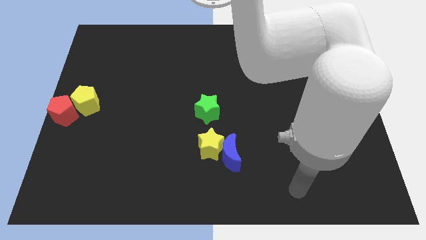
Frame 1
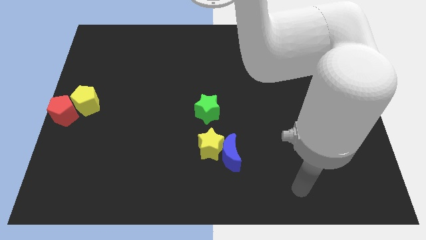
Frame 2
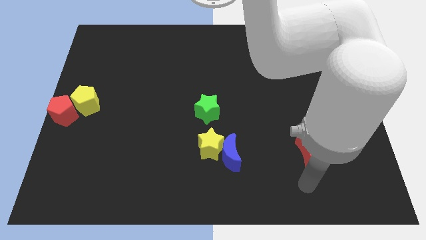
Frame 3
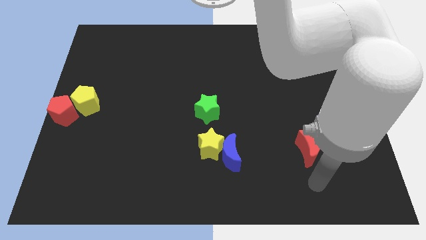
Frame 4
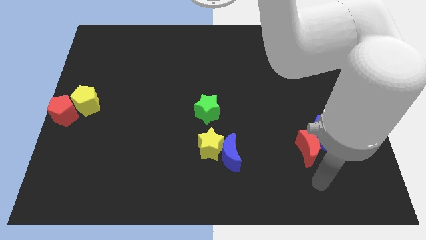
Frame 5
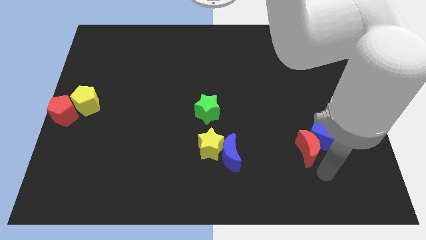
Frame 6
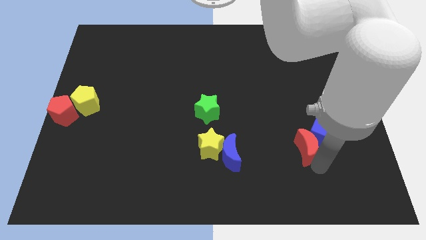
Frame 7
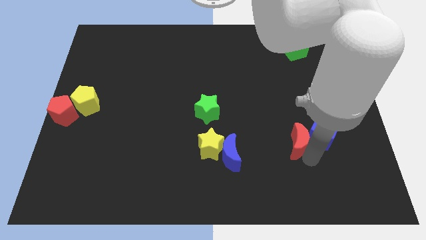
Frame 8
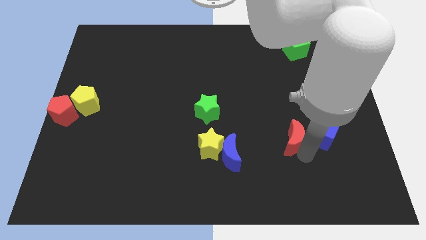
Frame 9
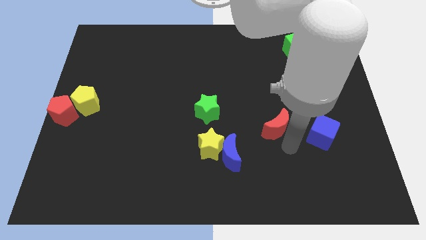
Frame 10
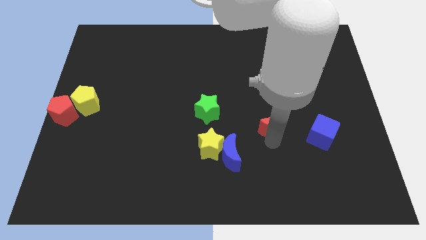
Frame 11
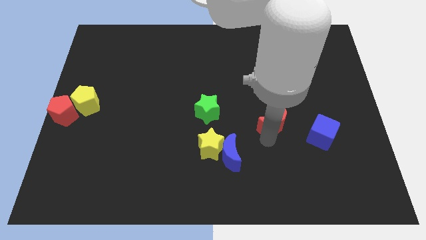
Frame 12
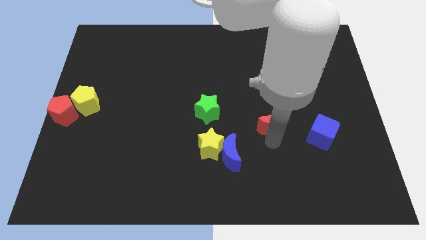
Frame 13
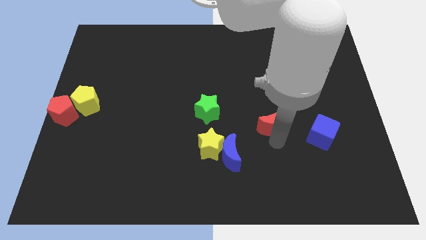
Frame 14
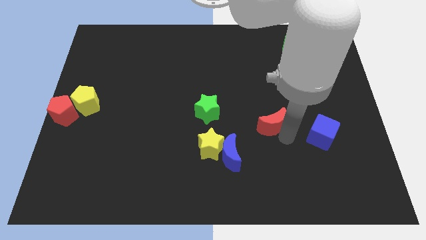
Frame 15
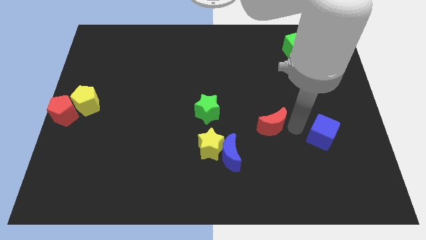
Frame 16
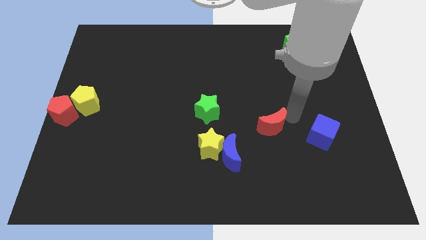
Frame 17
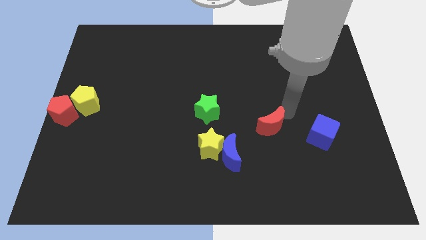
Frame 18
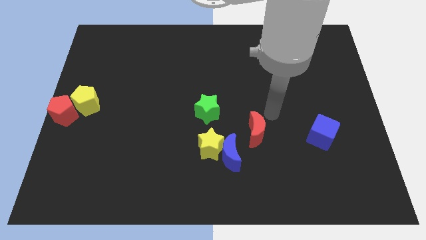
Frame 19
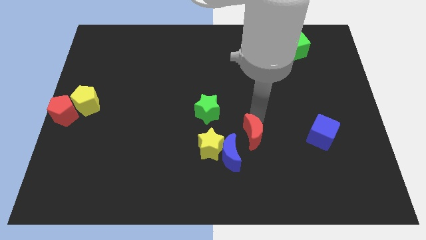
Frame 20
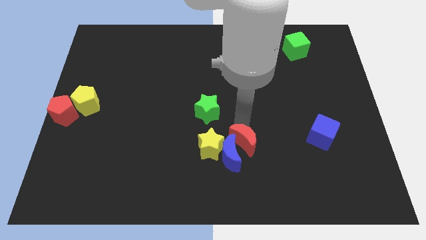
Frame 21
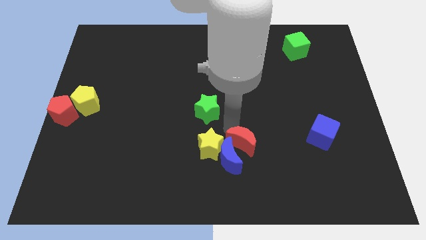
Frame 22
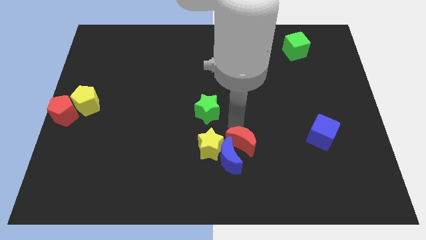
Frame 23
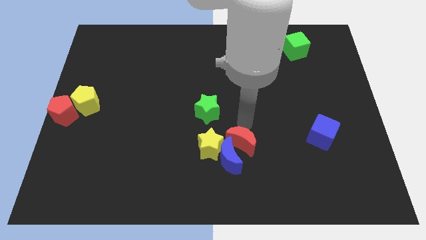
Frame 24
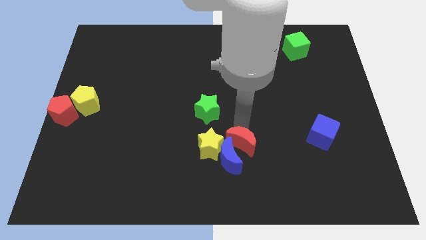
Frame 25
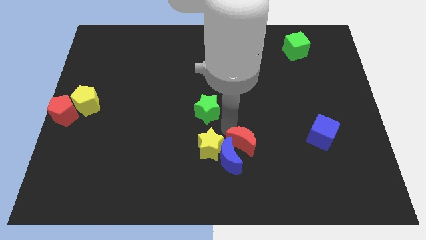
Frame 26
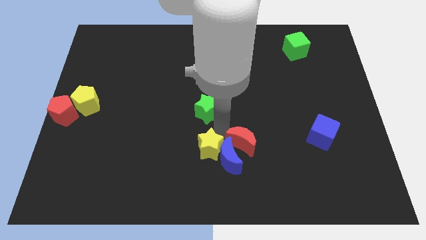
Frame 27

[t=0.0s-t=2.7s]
push the red moon into blue moon

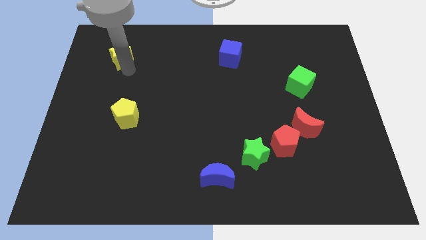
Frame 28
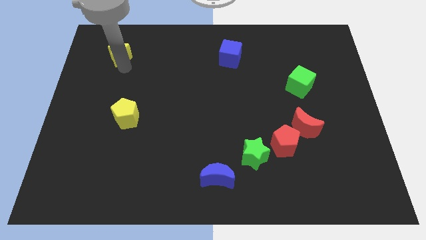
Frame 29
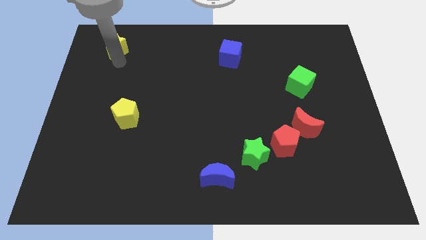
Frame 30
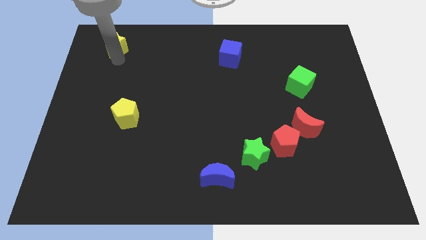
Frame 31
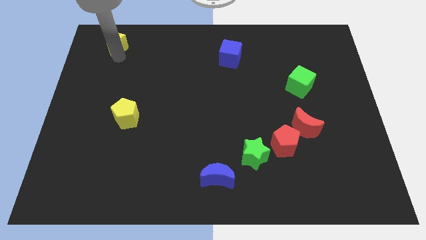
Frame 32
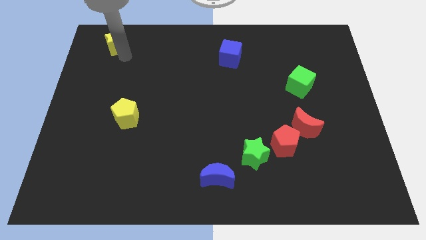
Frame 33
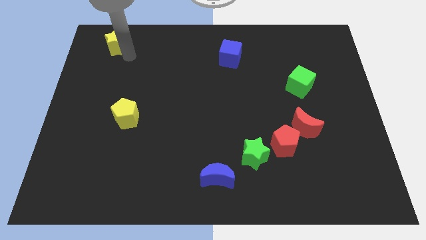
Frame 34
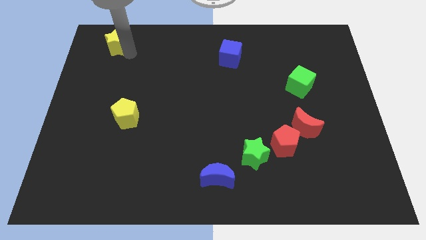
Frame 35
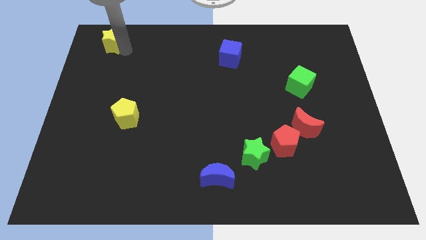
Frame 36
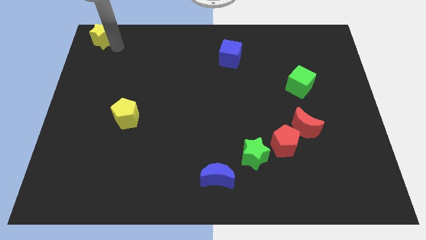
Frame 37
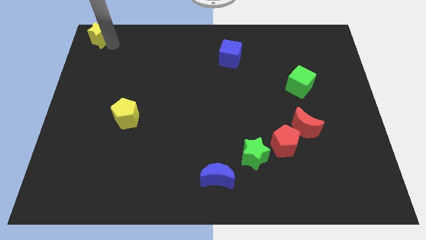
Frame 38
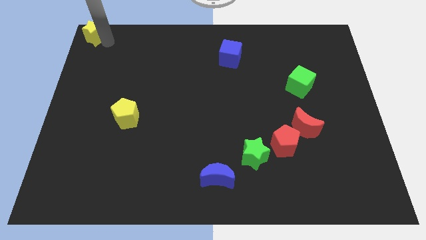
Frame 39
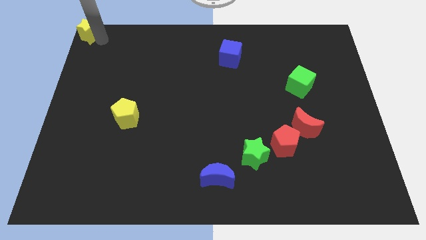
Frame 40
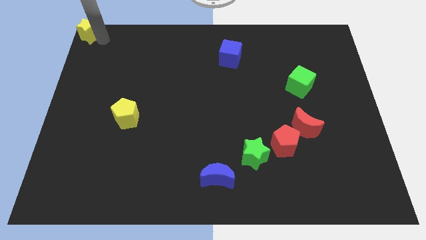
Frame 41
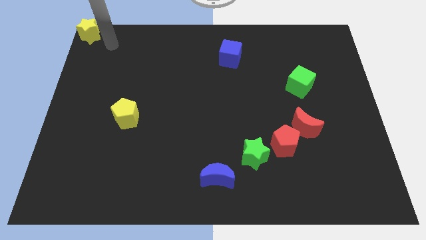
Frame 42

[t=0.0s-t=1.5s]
push the yellow star towards the top left corner of the board

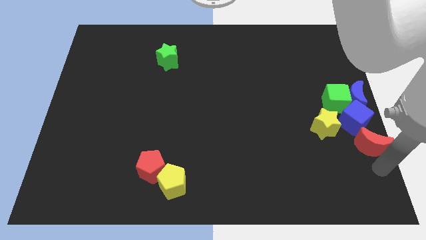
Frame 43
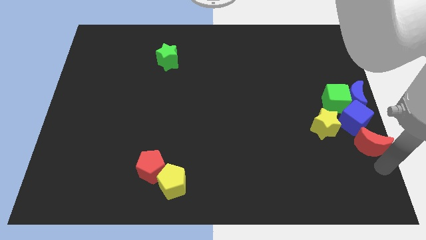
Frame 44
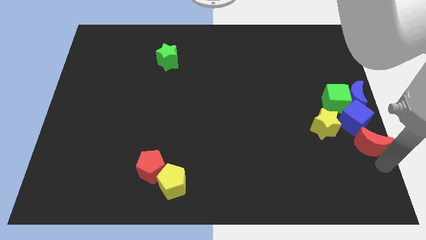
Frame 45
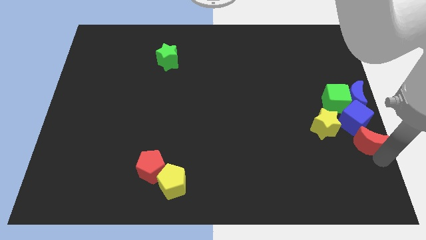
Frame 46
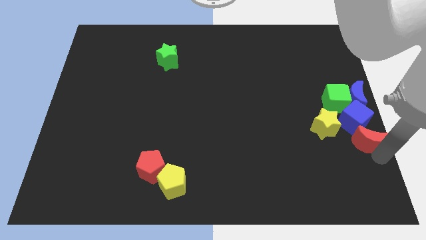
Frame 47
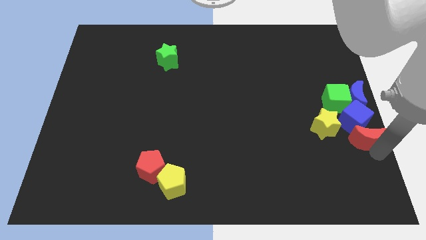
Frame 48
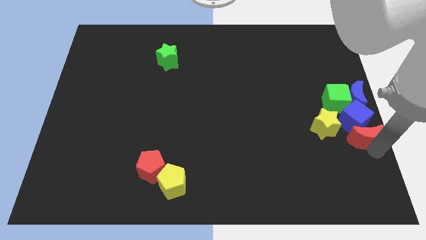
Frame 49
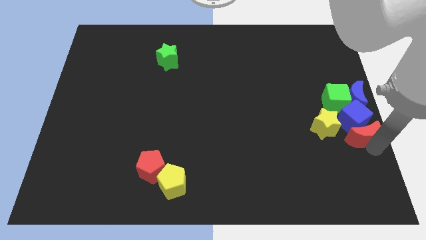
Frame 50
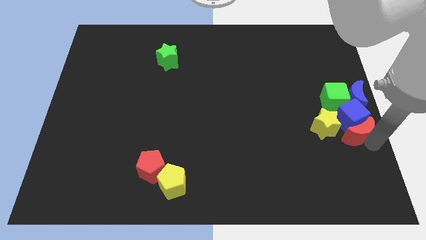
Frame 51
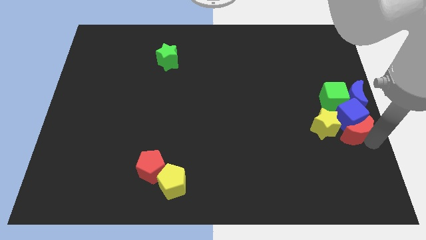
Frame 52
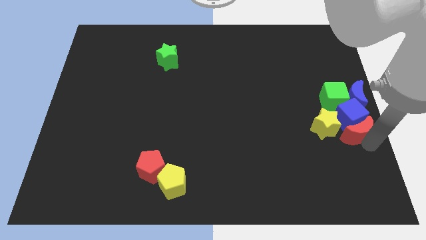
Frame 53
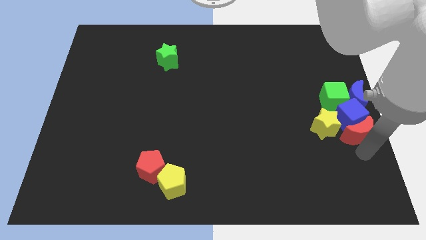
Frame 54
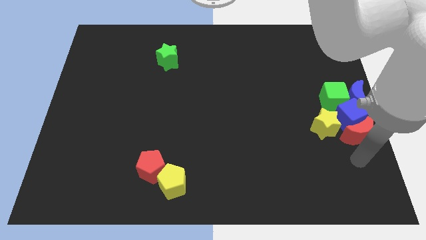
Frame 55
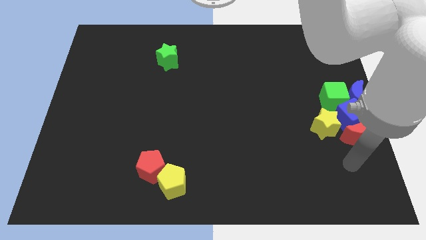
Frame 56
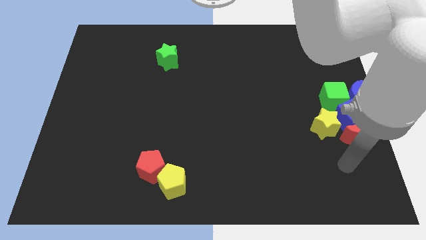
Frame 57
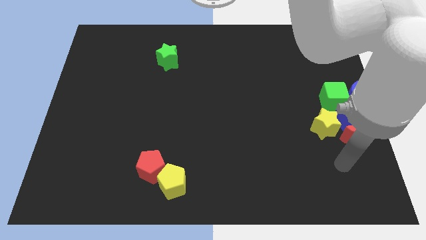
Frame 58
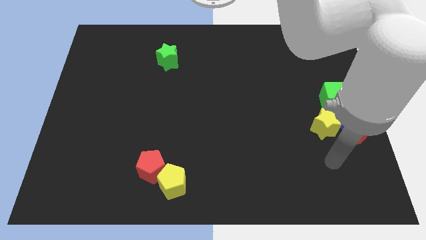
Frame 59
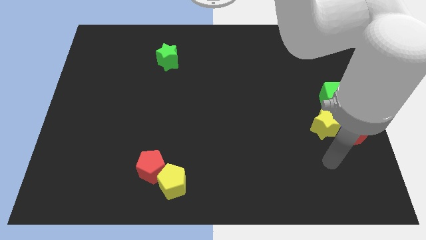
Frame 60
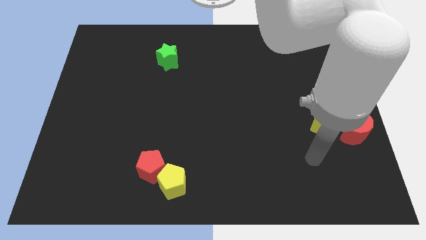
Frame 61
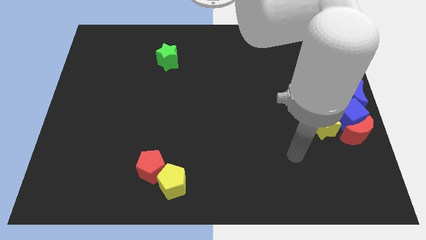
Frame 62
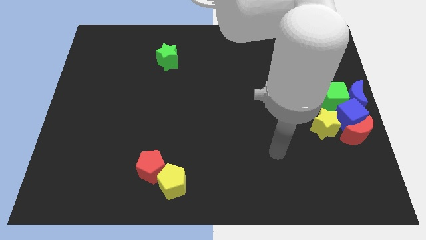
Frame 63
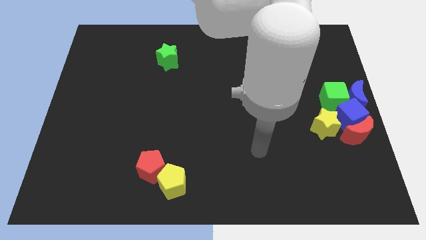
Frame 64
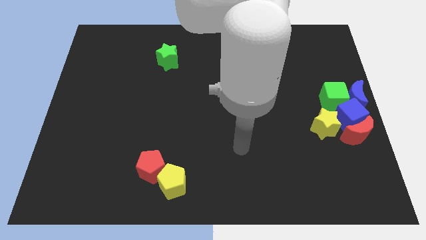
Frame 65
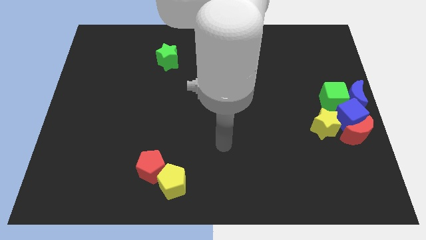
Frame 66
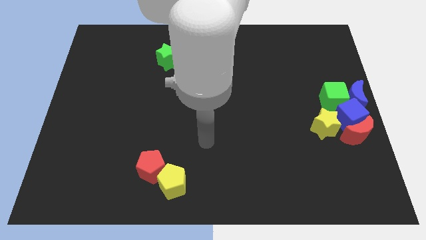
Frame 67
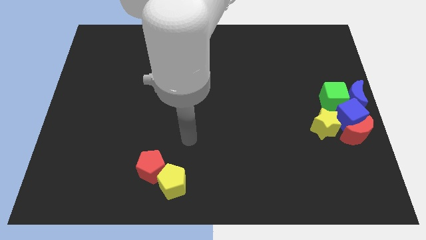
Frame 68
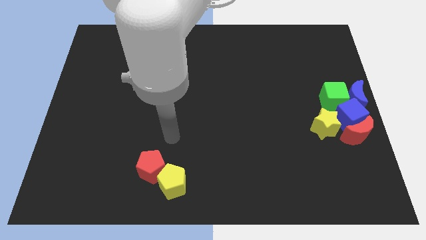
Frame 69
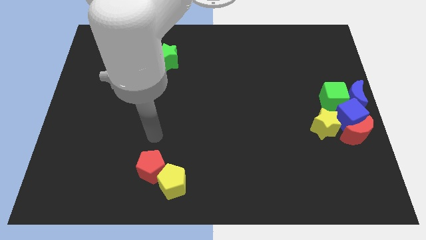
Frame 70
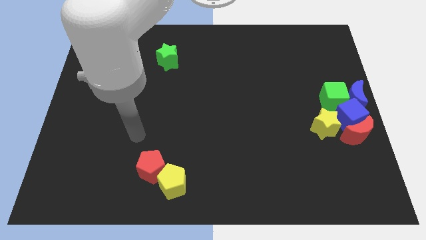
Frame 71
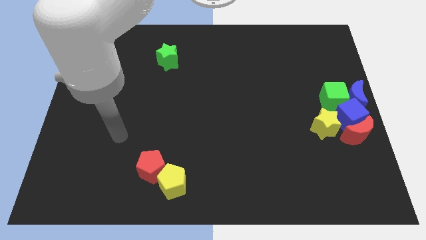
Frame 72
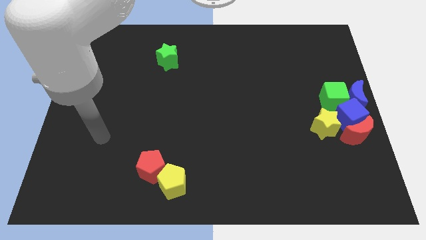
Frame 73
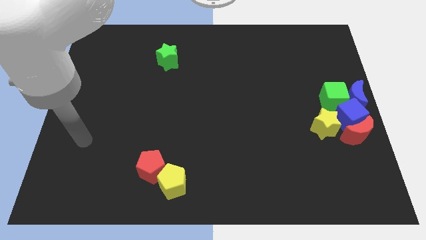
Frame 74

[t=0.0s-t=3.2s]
move your arm towards left side of the board

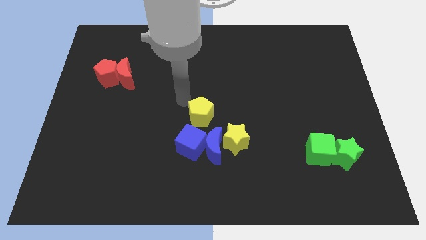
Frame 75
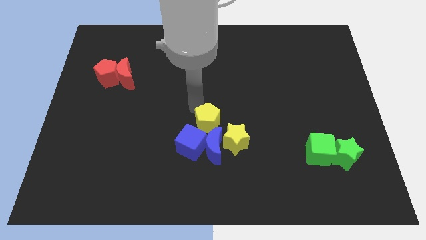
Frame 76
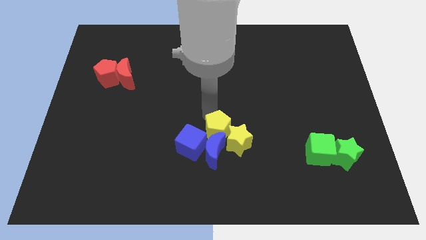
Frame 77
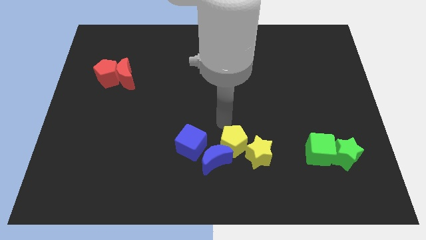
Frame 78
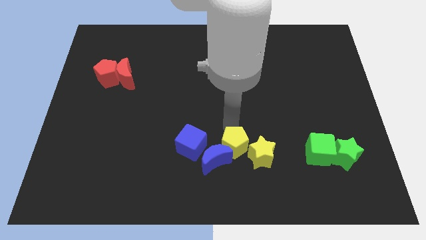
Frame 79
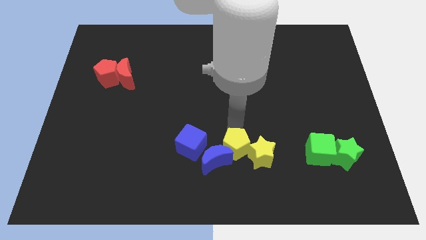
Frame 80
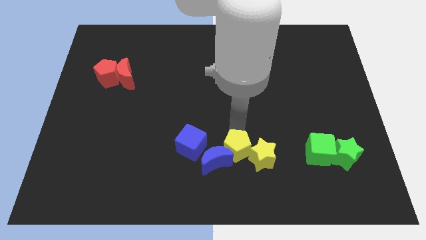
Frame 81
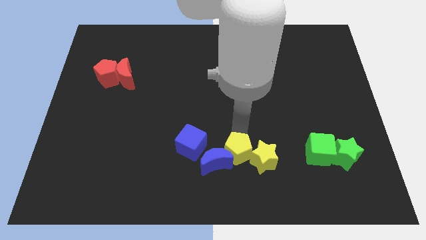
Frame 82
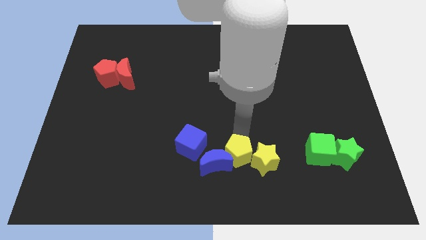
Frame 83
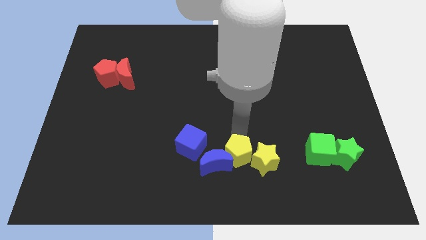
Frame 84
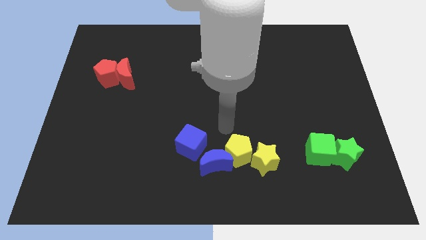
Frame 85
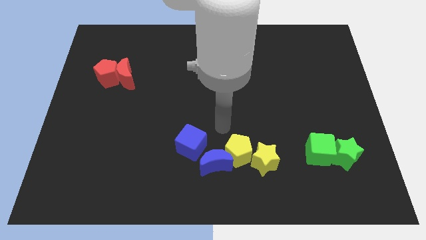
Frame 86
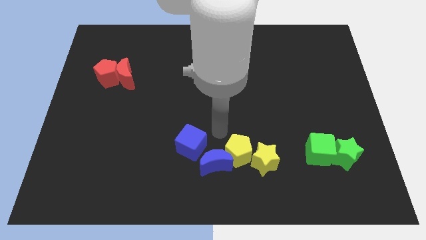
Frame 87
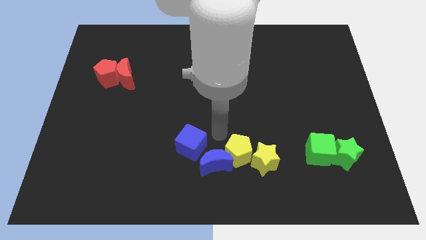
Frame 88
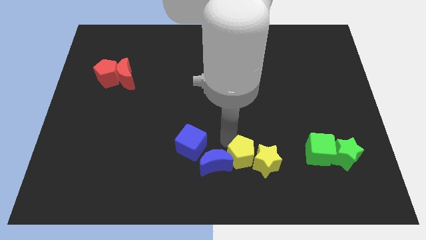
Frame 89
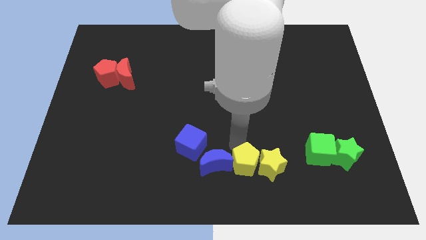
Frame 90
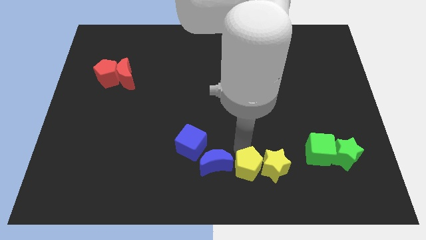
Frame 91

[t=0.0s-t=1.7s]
push the yellow pentagon to the left of yellow star

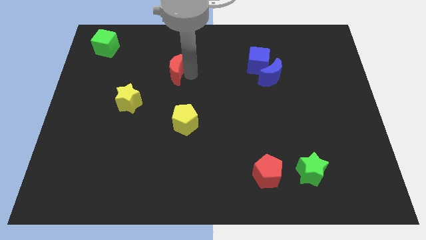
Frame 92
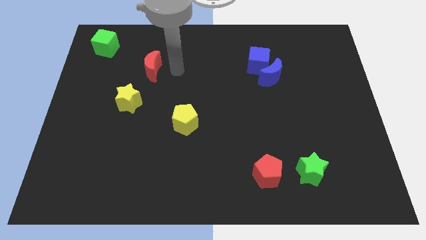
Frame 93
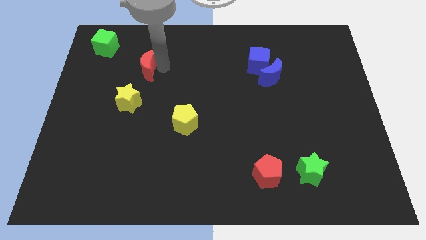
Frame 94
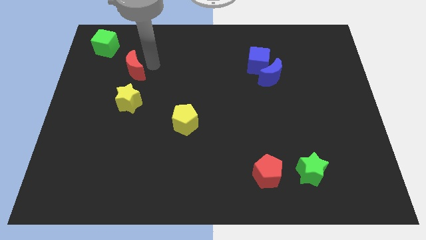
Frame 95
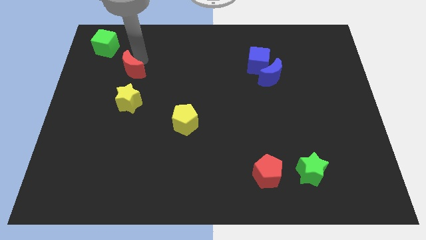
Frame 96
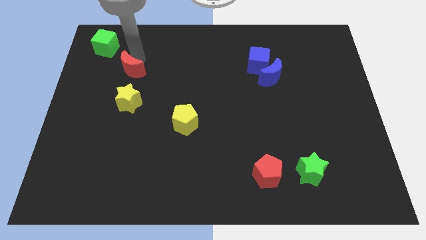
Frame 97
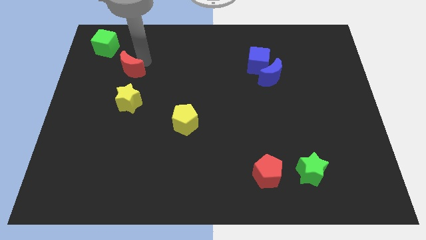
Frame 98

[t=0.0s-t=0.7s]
move the red moon horizontally to blue cube
